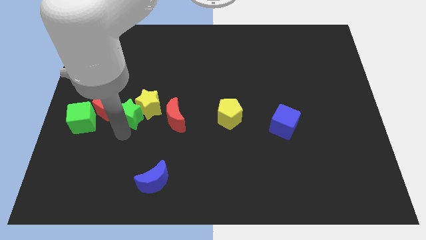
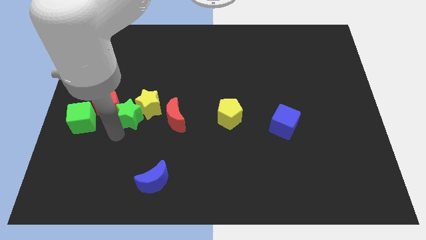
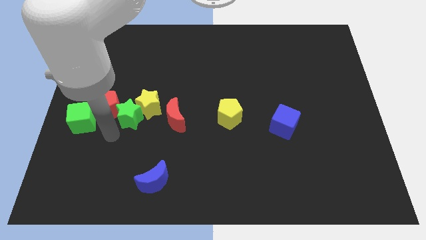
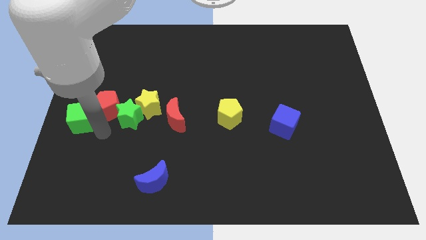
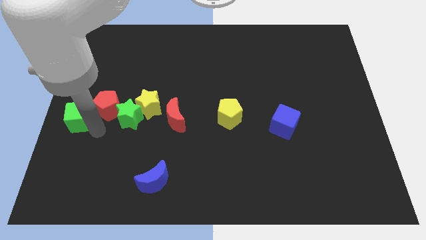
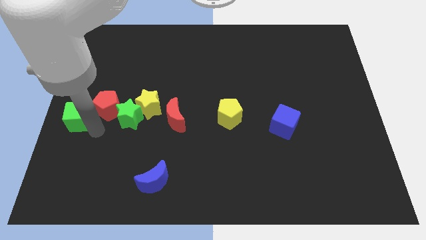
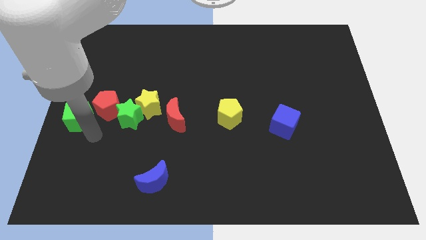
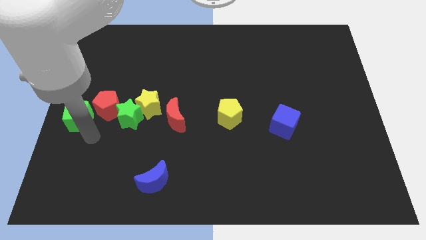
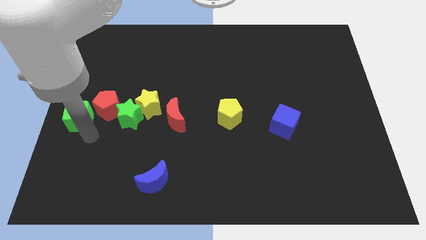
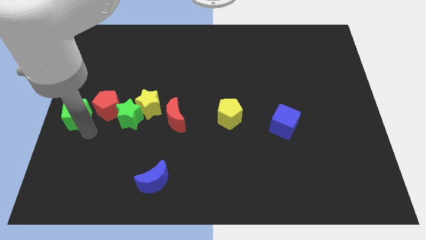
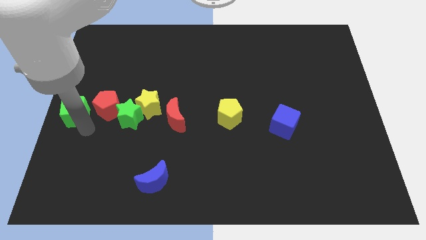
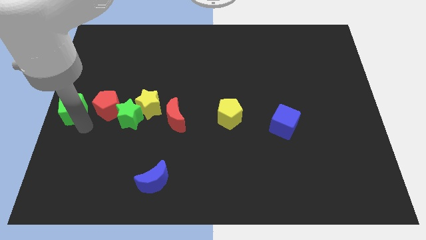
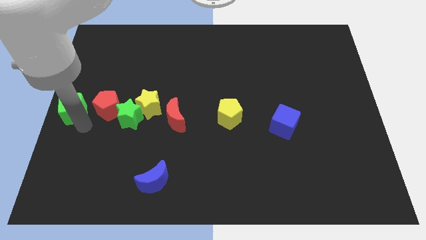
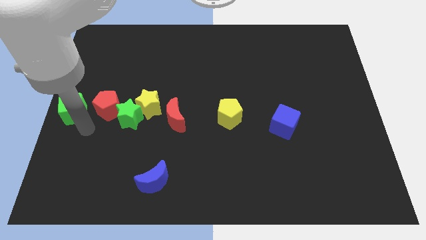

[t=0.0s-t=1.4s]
put the green cube on the left side of the red pentagon

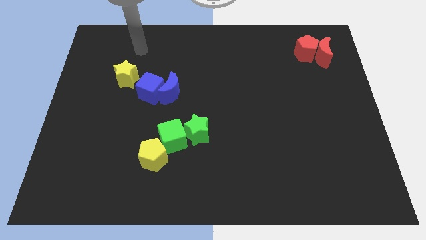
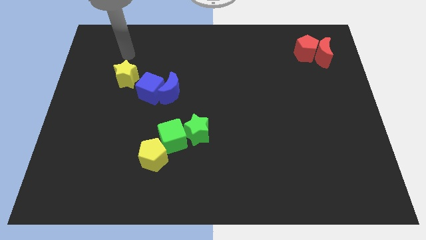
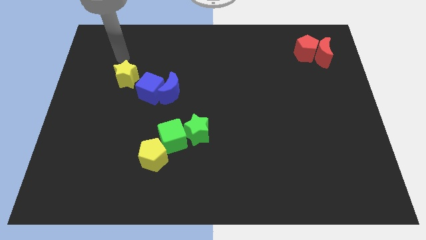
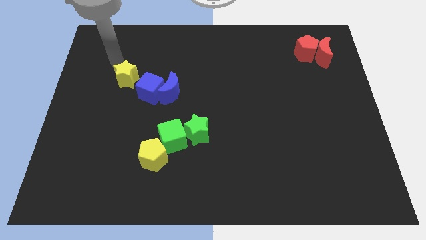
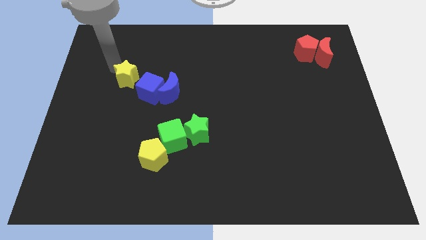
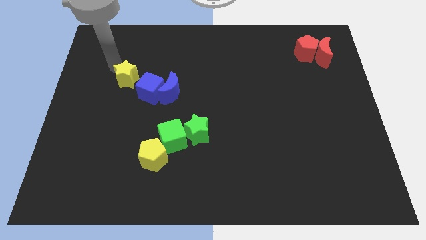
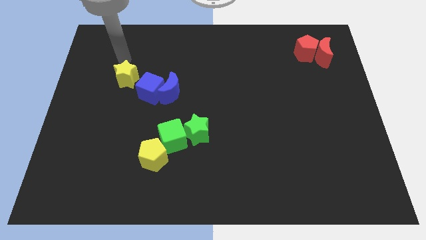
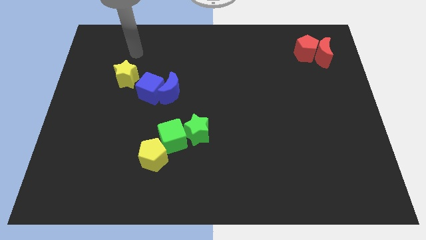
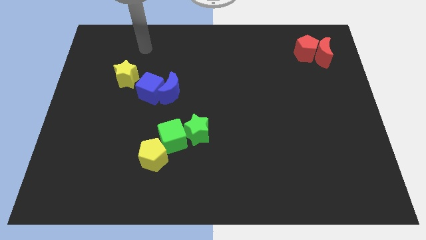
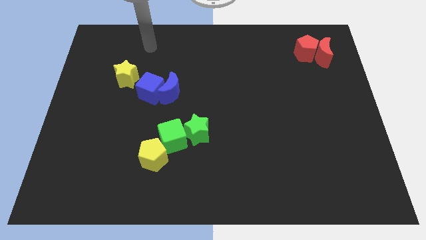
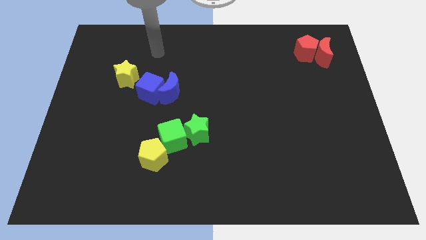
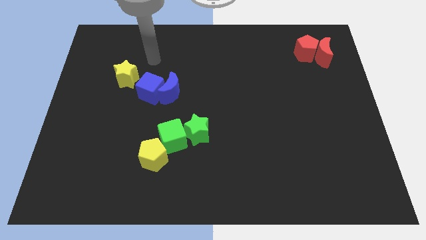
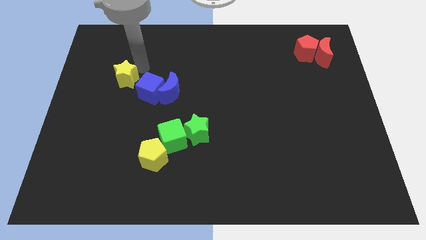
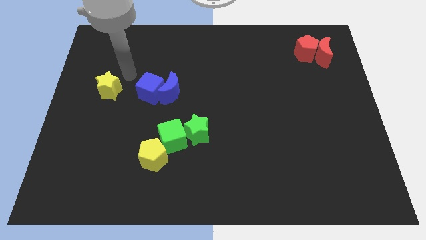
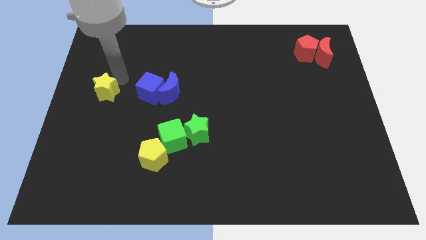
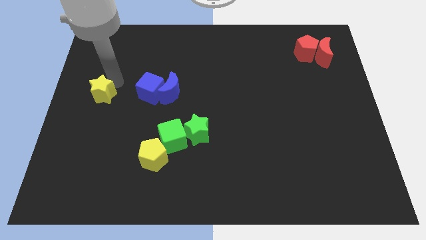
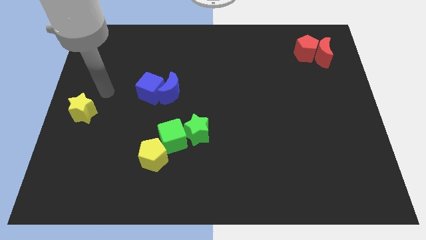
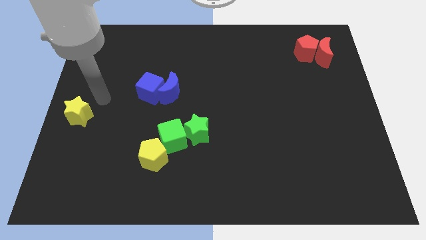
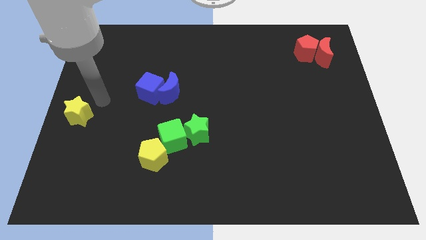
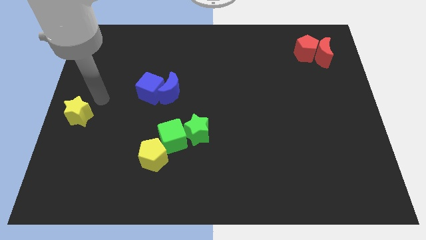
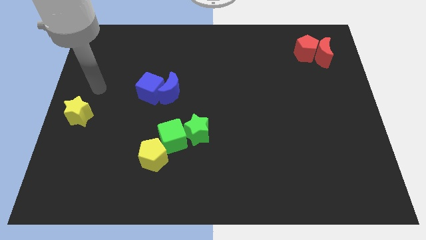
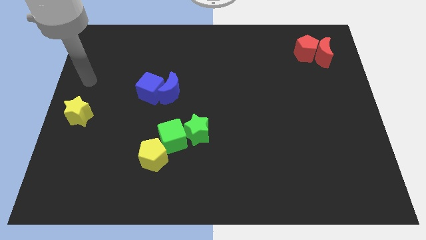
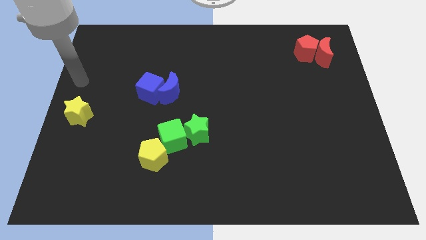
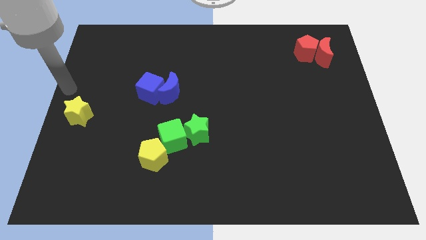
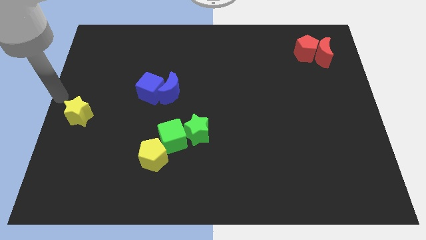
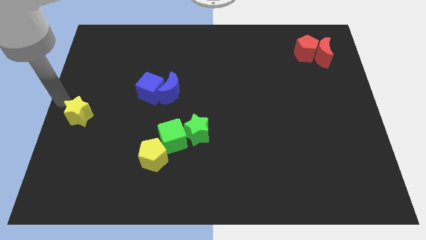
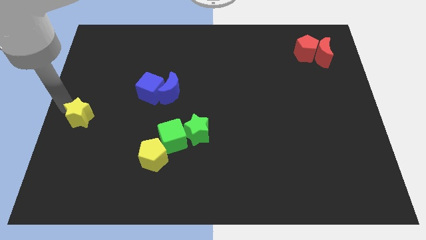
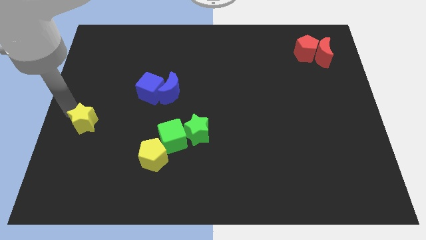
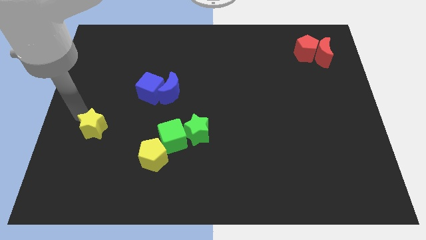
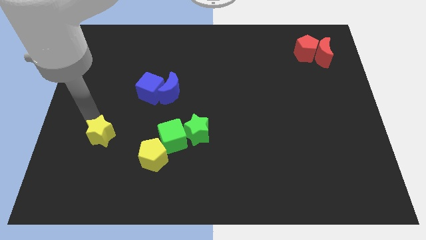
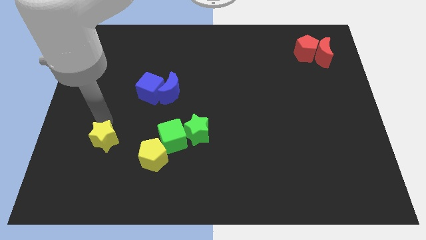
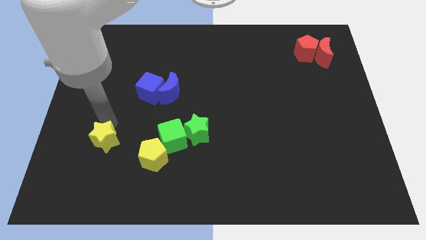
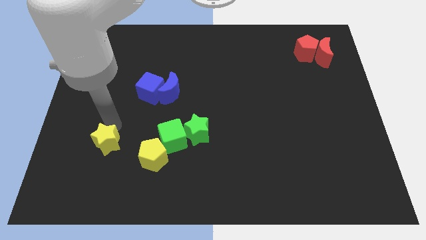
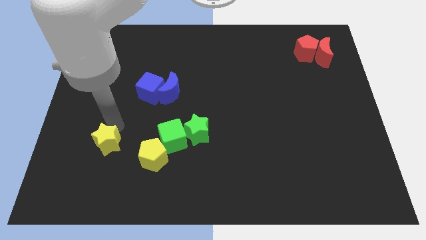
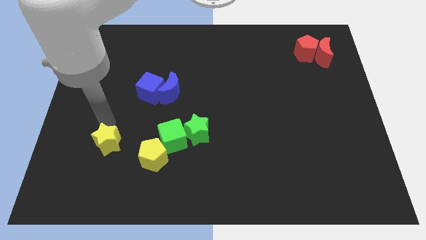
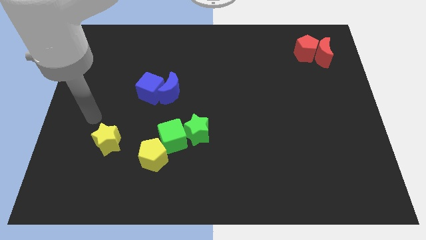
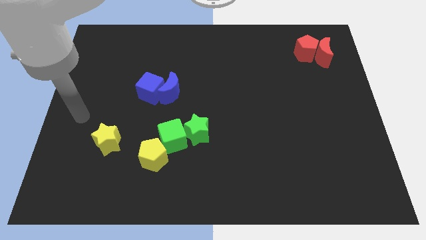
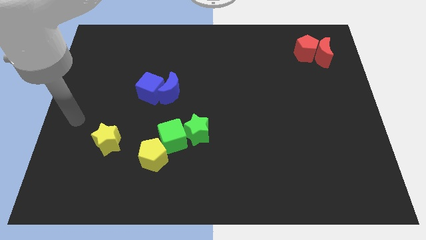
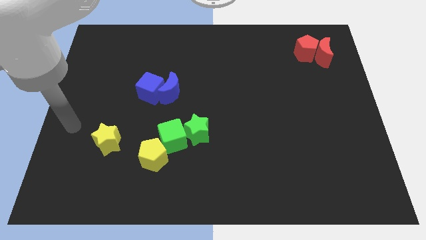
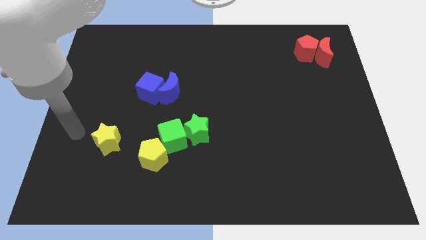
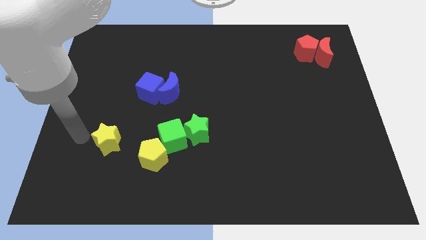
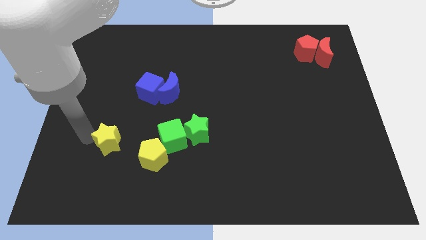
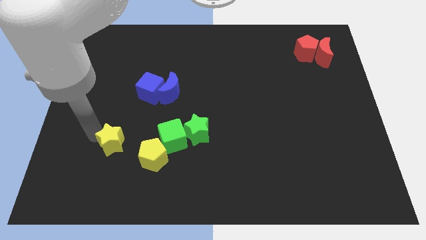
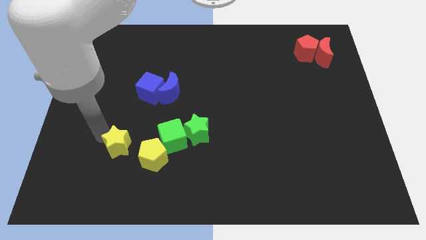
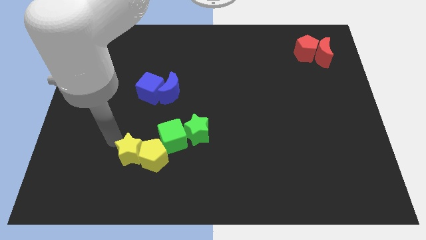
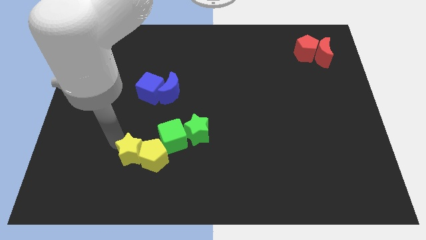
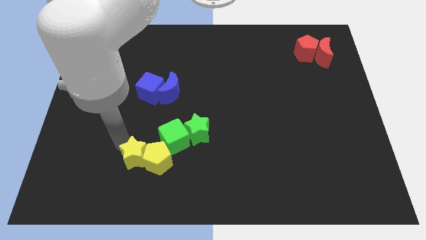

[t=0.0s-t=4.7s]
push the yellow star into the yellow pentagon

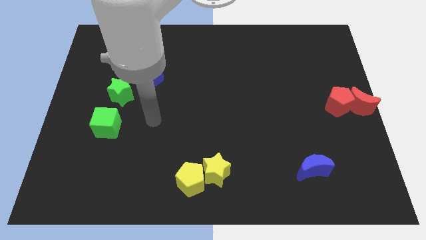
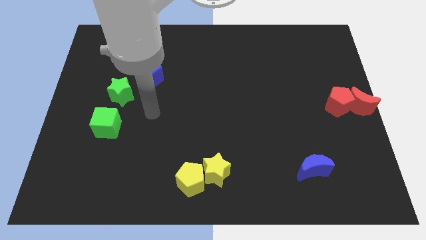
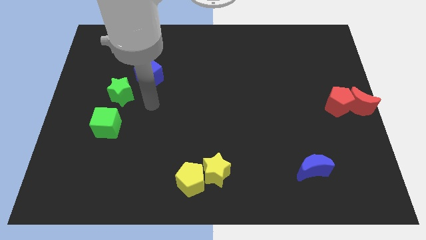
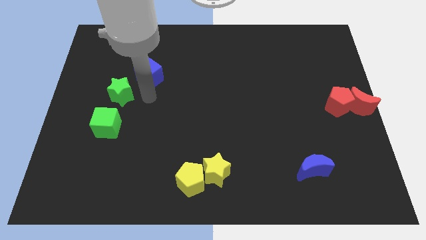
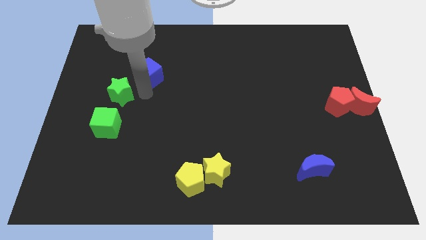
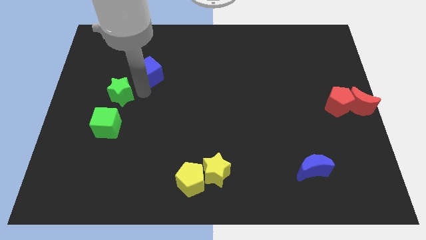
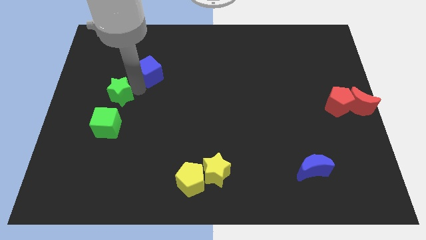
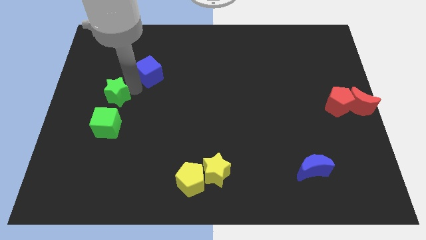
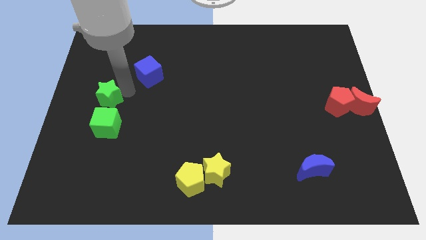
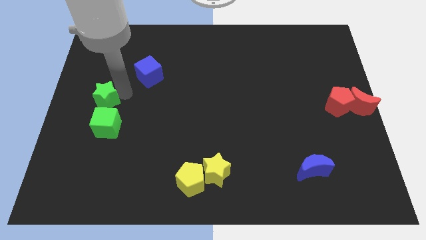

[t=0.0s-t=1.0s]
separate the green star and blue cube

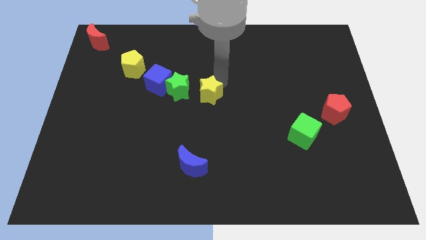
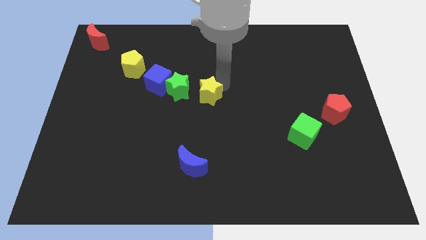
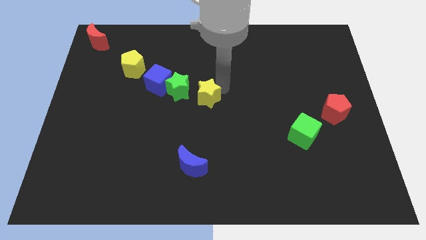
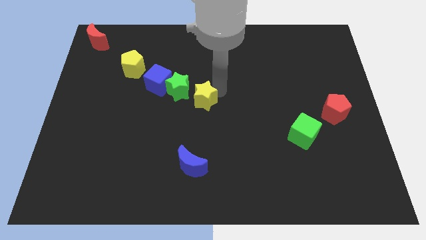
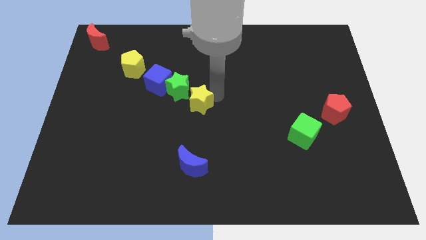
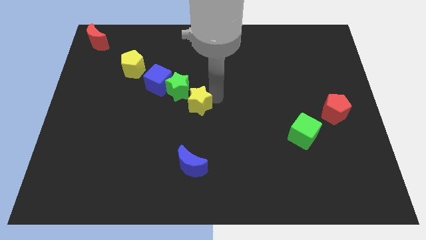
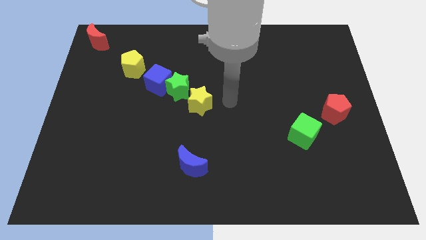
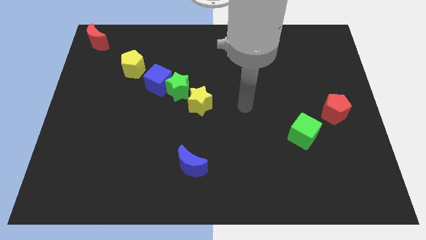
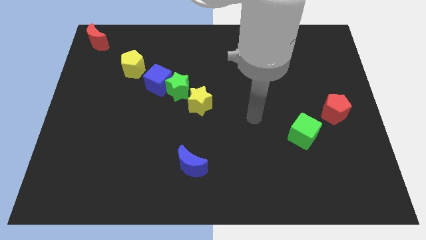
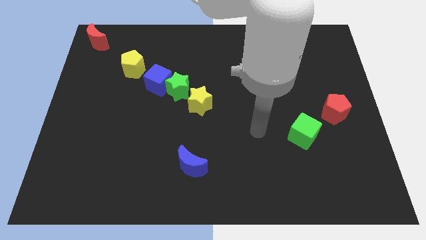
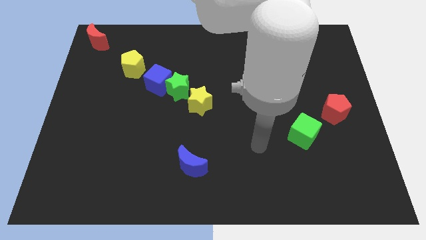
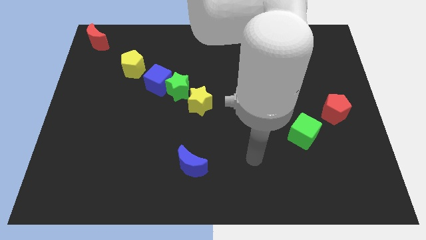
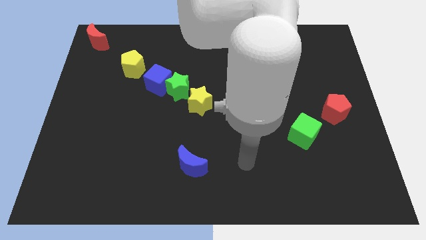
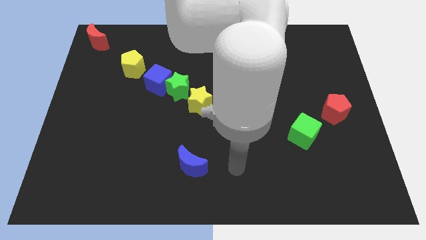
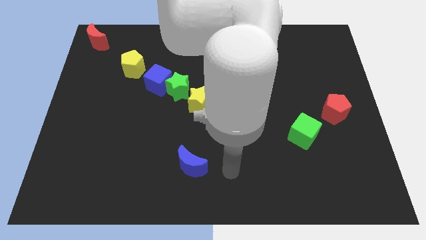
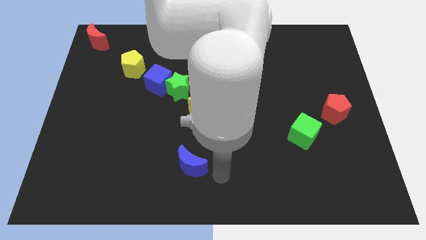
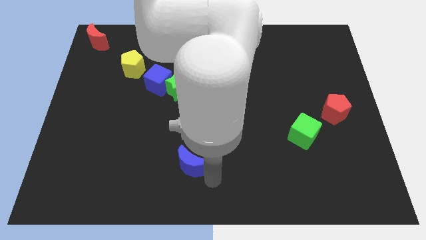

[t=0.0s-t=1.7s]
move the yellow star diagonally below the green star

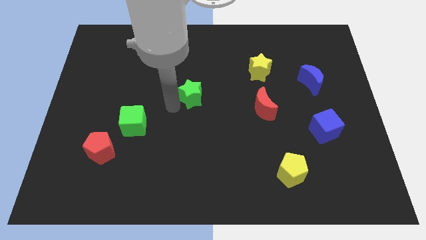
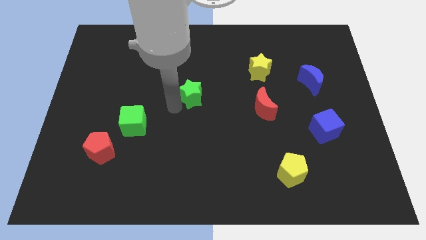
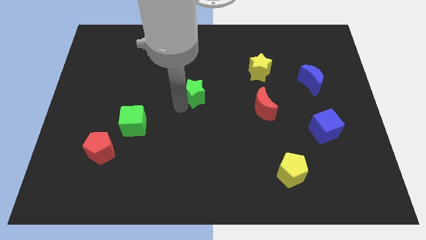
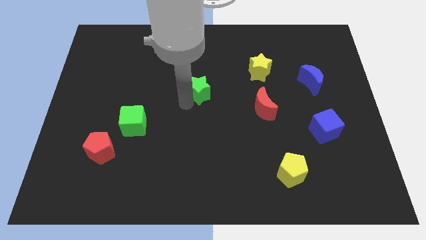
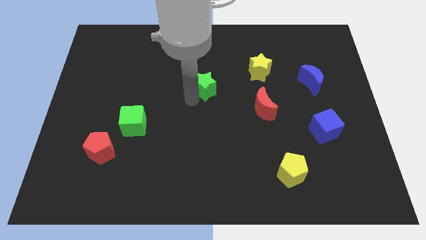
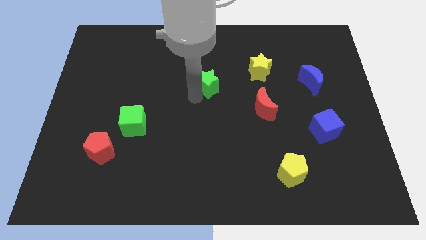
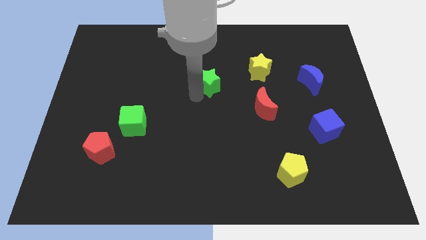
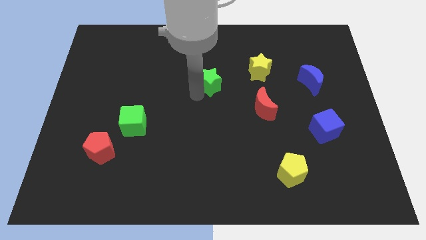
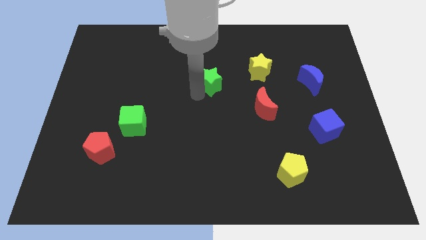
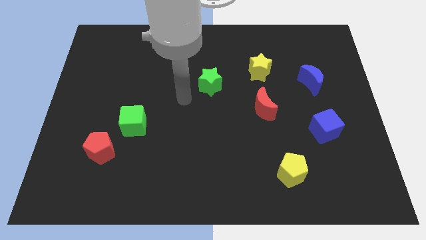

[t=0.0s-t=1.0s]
move the green star to make a triangle with yellow star and red moon
